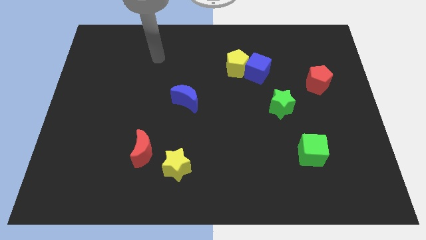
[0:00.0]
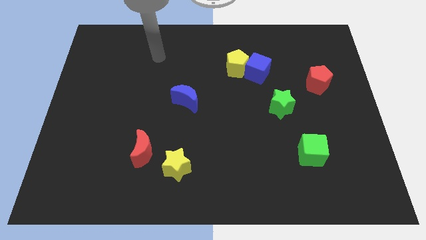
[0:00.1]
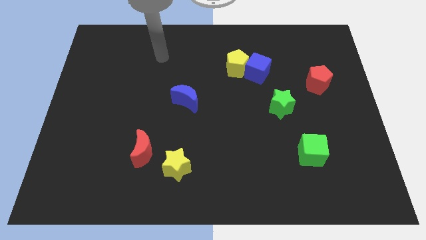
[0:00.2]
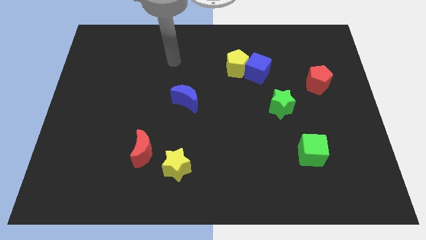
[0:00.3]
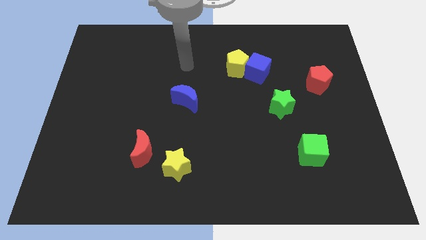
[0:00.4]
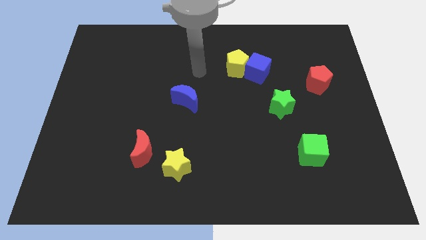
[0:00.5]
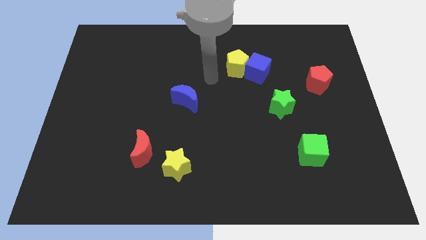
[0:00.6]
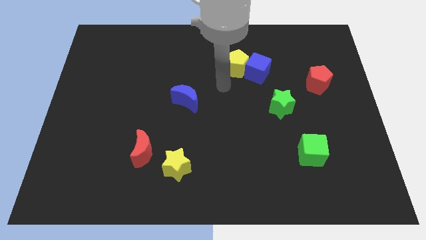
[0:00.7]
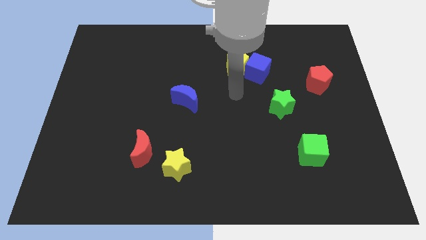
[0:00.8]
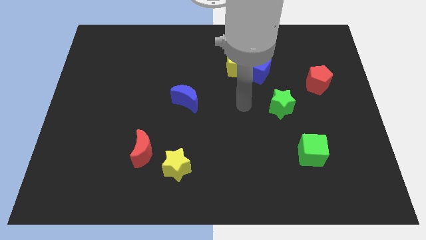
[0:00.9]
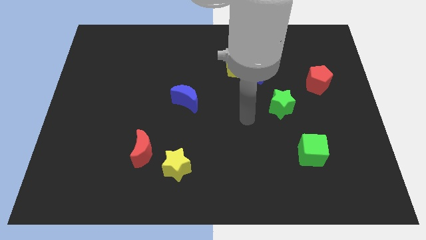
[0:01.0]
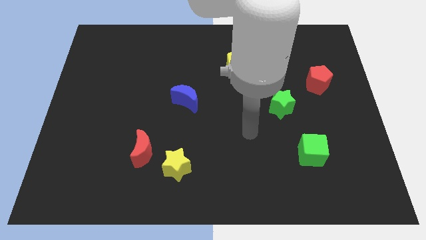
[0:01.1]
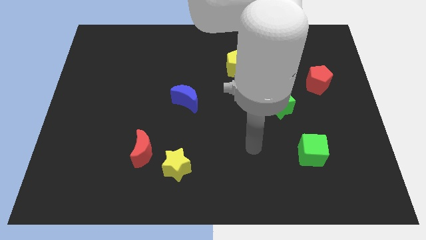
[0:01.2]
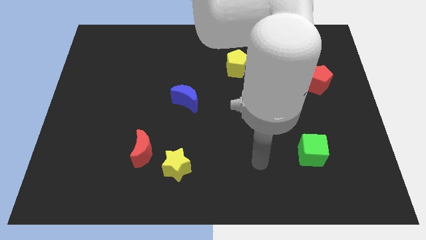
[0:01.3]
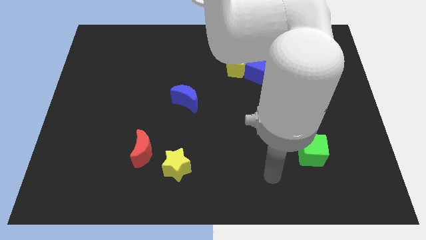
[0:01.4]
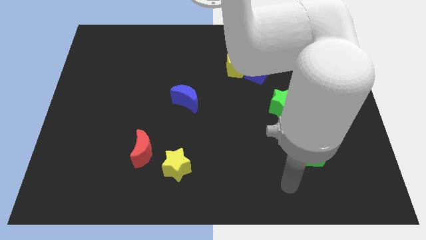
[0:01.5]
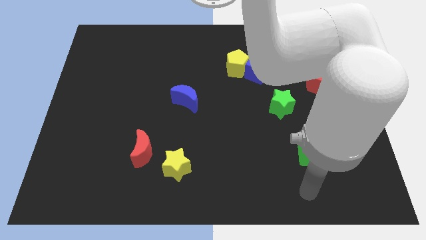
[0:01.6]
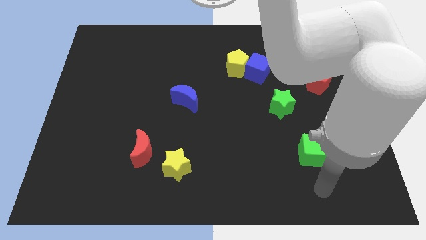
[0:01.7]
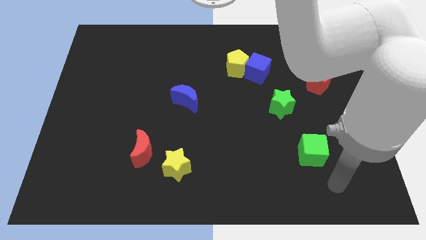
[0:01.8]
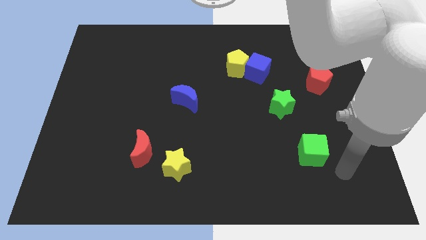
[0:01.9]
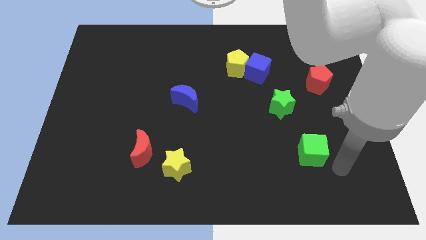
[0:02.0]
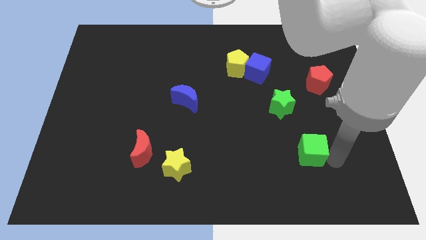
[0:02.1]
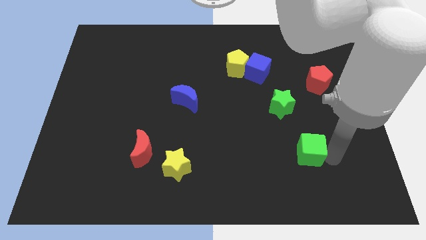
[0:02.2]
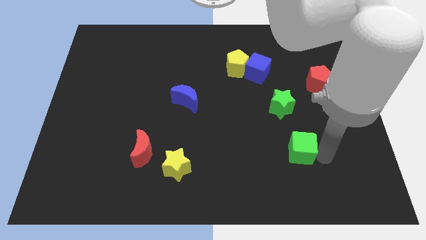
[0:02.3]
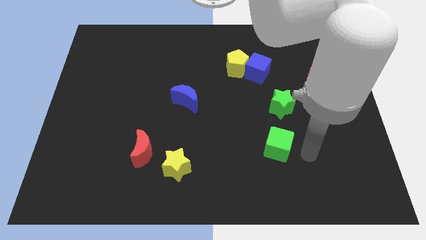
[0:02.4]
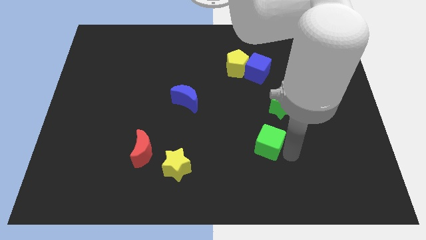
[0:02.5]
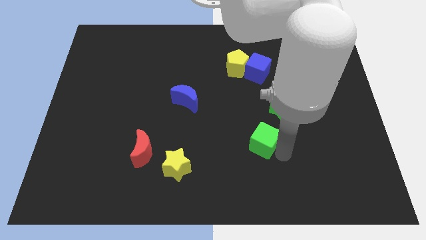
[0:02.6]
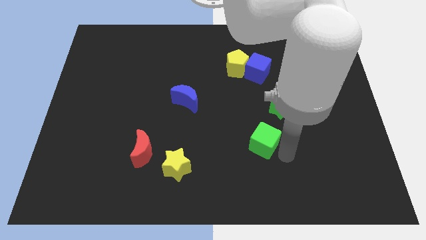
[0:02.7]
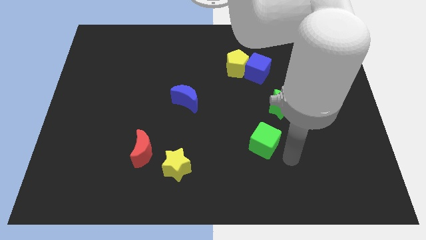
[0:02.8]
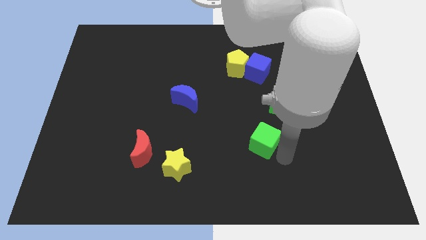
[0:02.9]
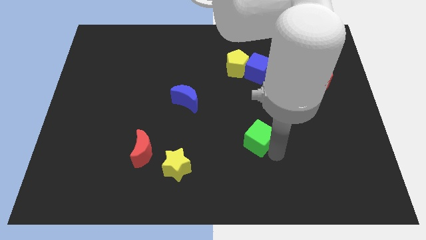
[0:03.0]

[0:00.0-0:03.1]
move the green cube towards the centre of the board

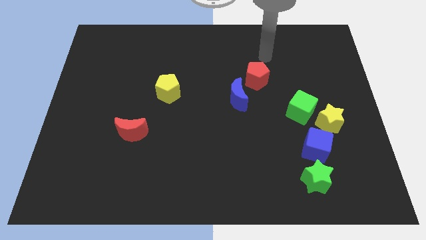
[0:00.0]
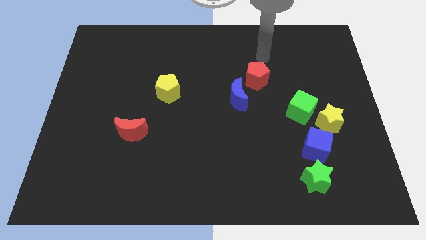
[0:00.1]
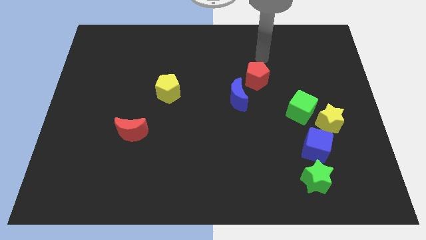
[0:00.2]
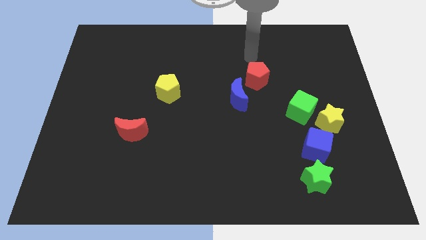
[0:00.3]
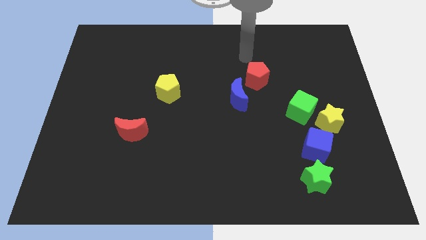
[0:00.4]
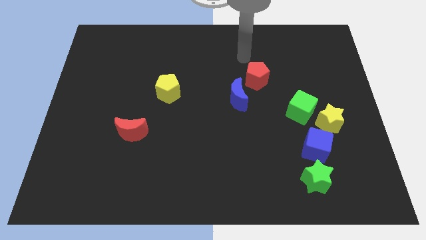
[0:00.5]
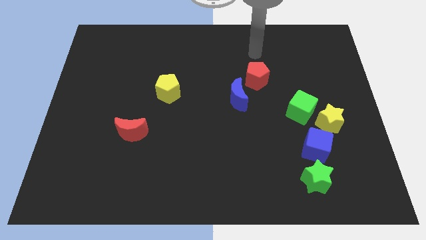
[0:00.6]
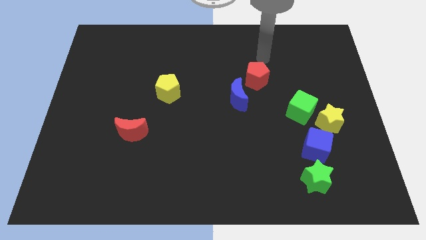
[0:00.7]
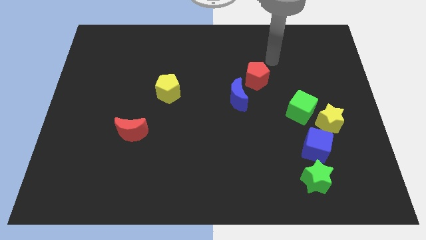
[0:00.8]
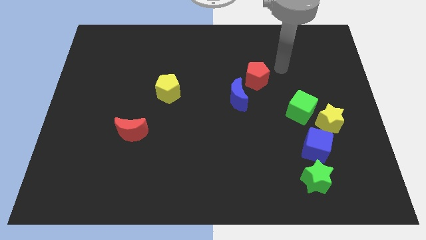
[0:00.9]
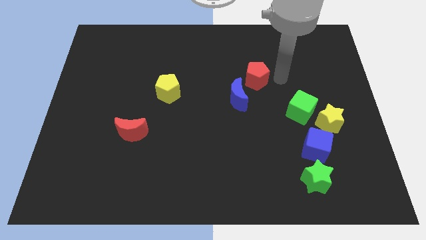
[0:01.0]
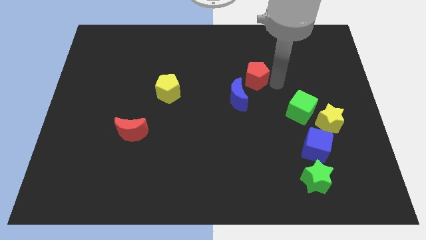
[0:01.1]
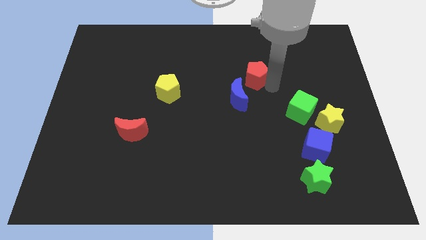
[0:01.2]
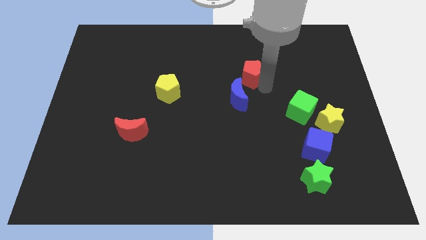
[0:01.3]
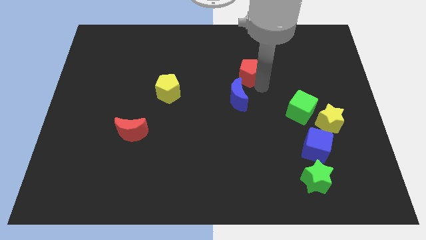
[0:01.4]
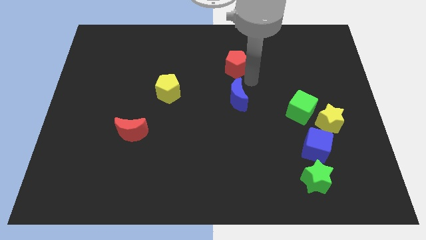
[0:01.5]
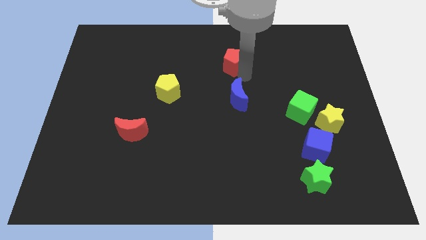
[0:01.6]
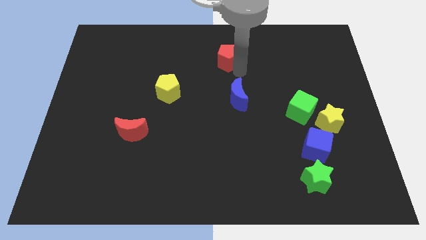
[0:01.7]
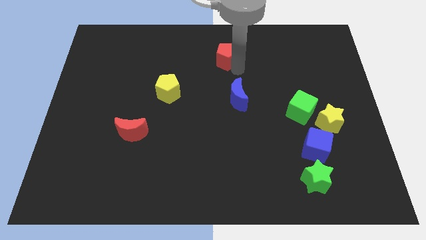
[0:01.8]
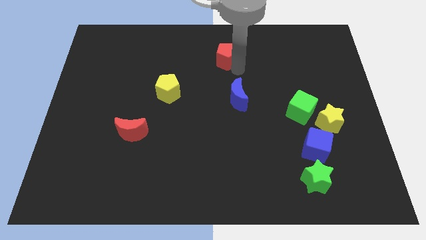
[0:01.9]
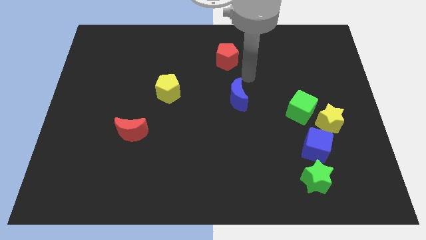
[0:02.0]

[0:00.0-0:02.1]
move the red pentagon towards the top

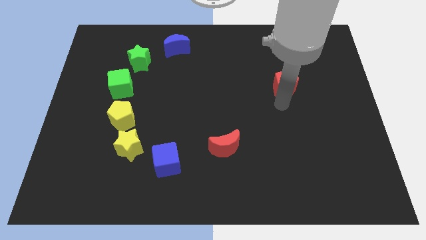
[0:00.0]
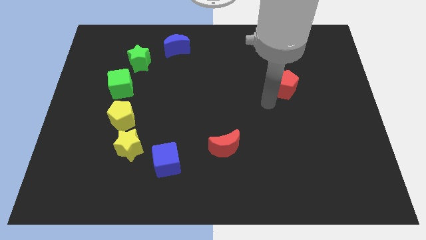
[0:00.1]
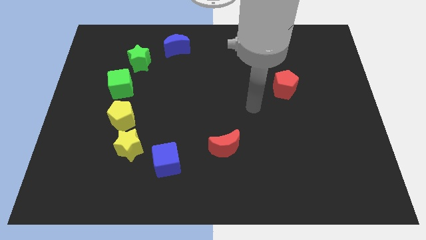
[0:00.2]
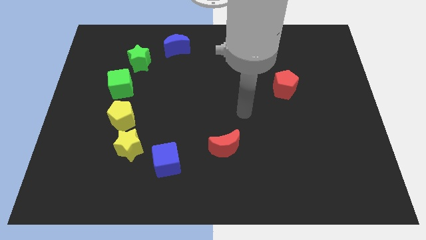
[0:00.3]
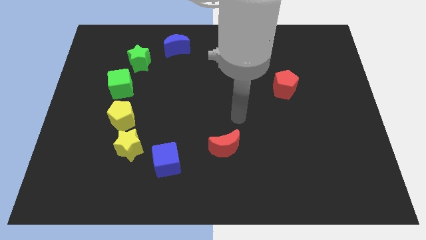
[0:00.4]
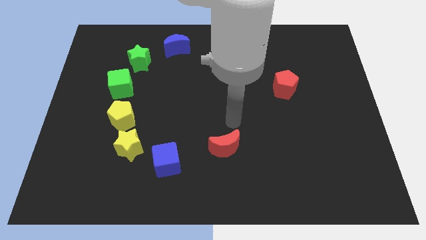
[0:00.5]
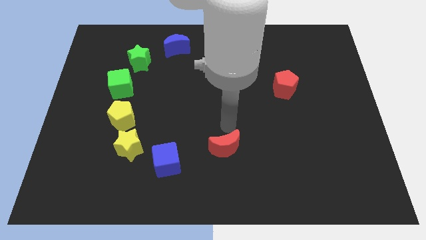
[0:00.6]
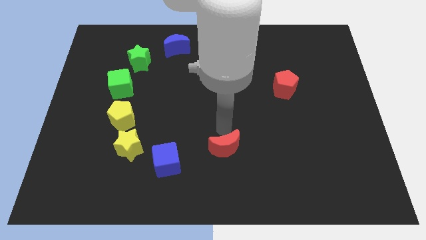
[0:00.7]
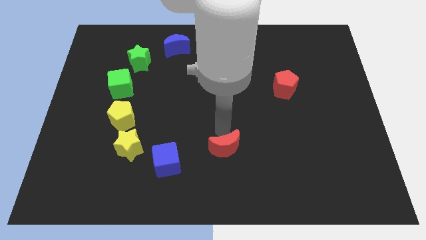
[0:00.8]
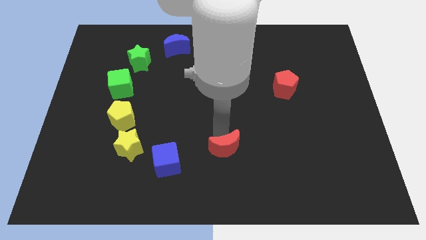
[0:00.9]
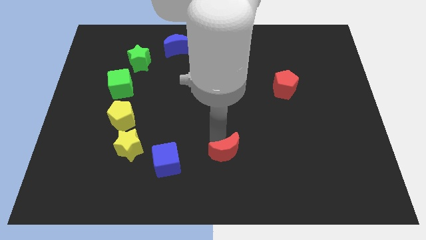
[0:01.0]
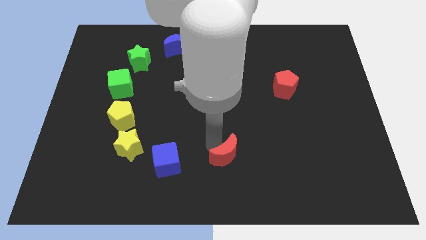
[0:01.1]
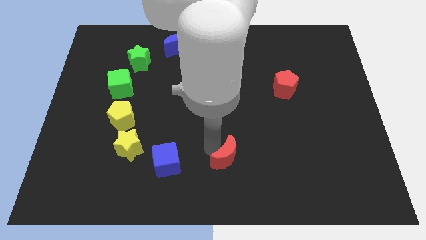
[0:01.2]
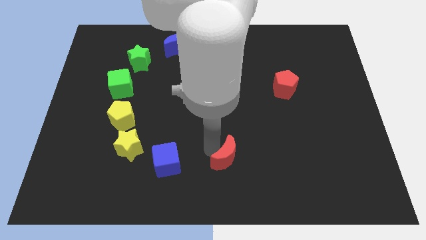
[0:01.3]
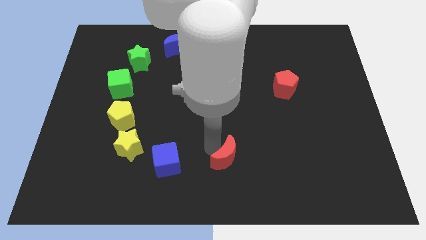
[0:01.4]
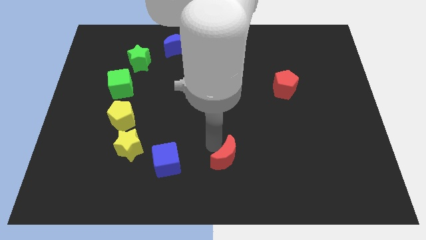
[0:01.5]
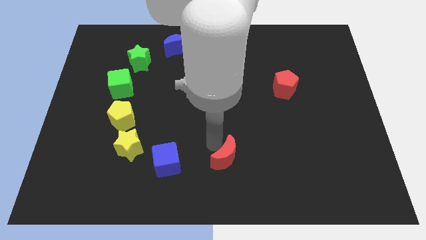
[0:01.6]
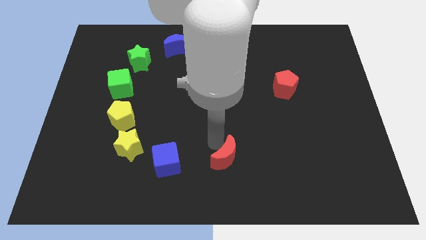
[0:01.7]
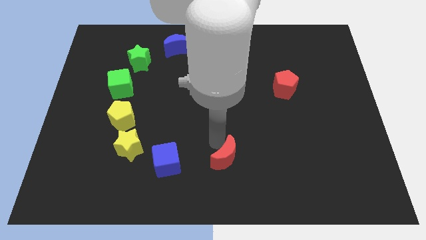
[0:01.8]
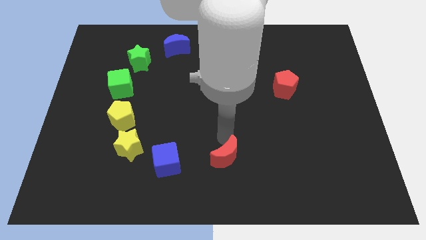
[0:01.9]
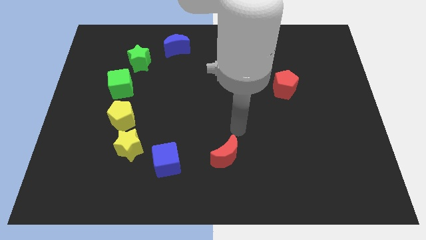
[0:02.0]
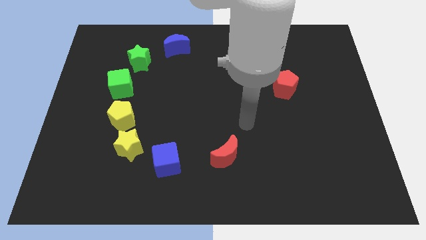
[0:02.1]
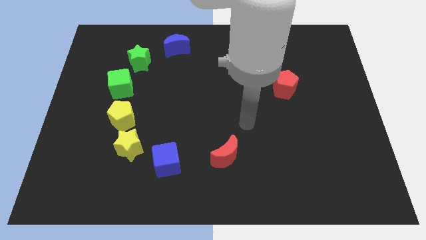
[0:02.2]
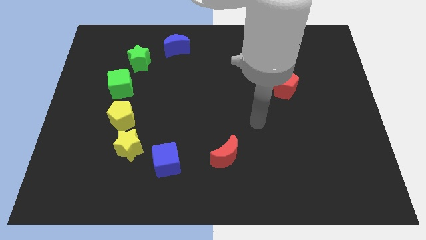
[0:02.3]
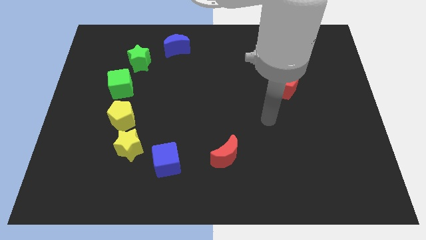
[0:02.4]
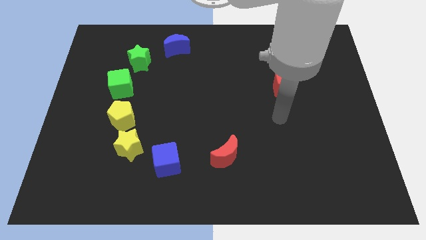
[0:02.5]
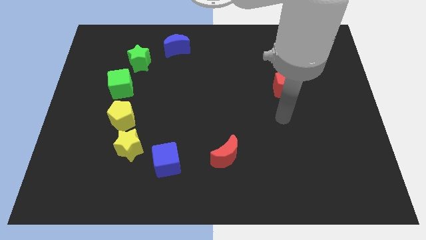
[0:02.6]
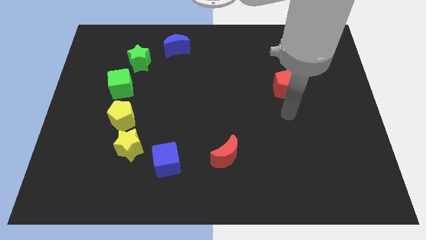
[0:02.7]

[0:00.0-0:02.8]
slightly tap the red moon

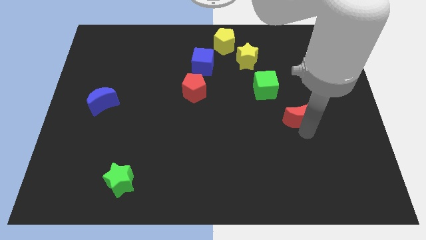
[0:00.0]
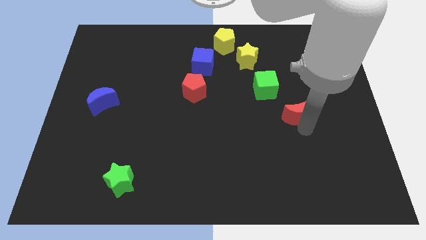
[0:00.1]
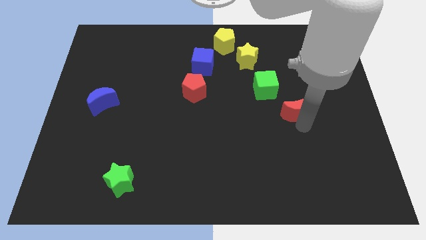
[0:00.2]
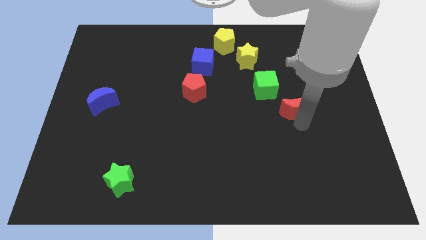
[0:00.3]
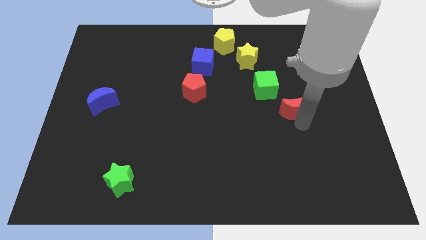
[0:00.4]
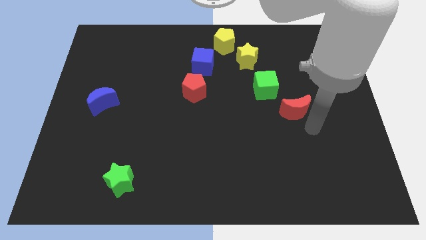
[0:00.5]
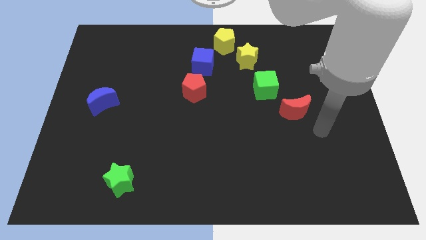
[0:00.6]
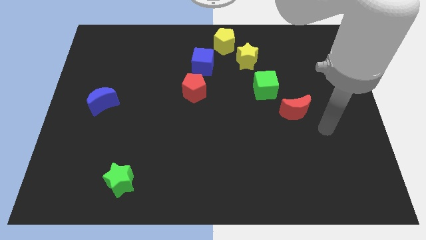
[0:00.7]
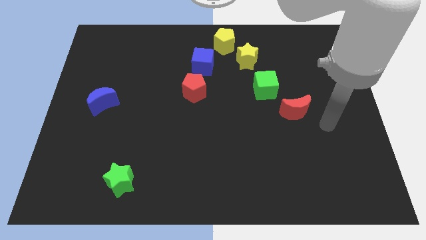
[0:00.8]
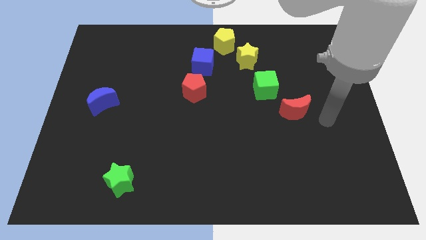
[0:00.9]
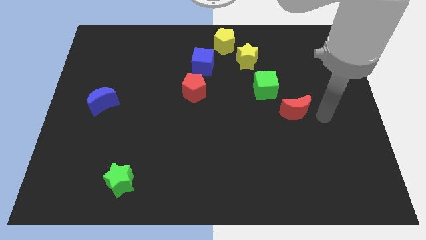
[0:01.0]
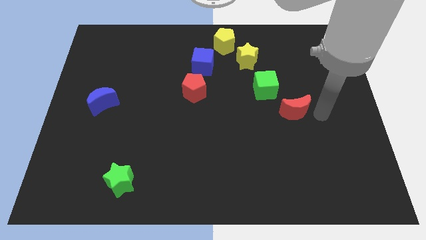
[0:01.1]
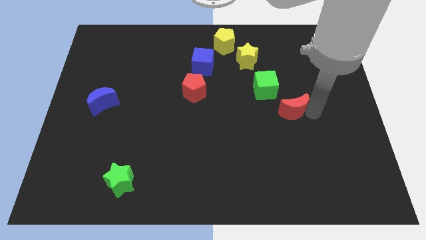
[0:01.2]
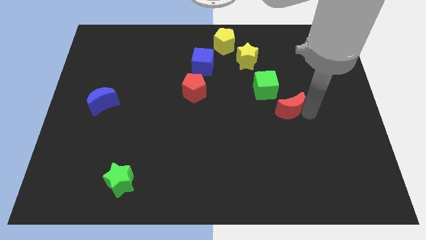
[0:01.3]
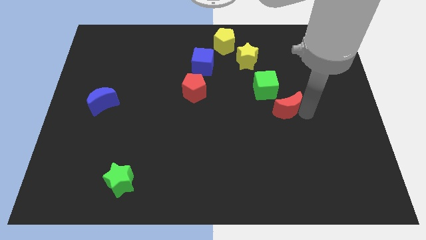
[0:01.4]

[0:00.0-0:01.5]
push the red crescent towards the green cube
